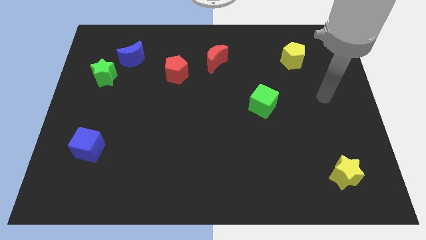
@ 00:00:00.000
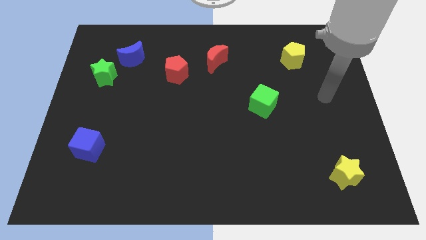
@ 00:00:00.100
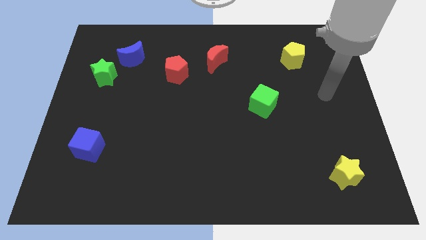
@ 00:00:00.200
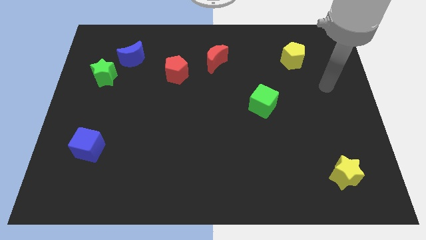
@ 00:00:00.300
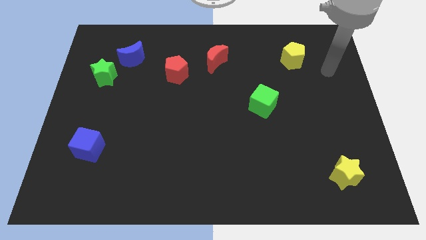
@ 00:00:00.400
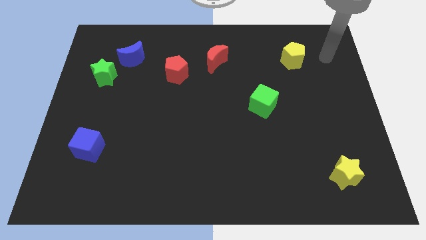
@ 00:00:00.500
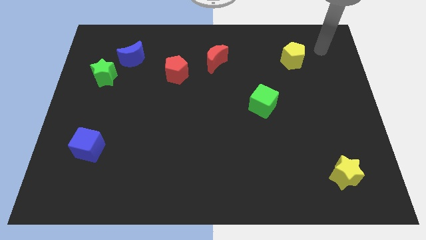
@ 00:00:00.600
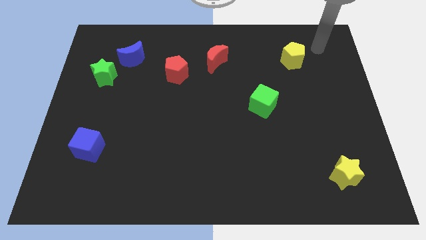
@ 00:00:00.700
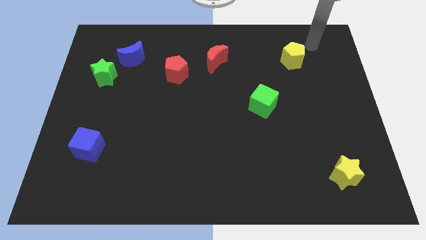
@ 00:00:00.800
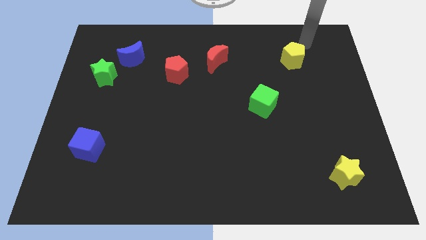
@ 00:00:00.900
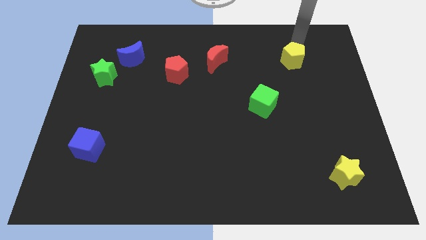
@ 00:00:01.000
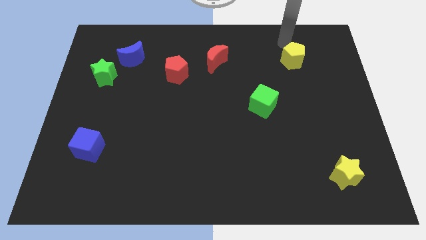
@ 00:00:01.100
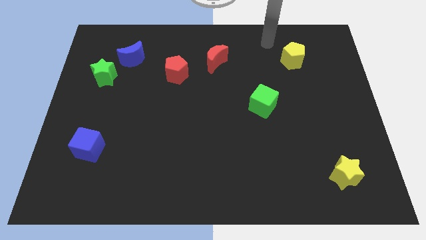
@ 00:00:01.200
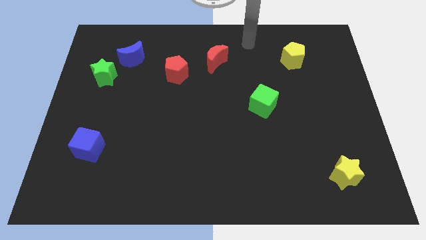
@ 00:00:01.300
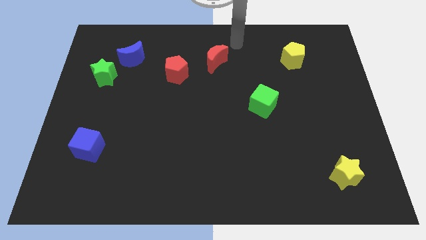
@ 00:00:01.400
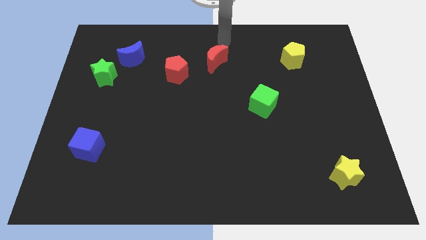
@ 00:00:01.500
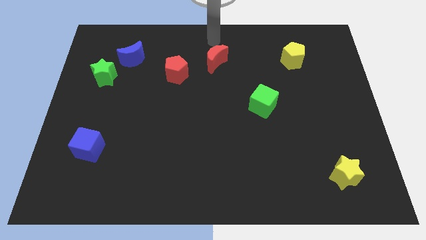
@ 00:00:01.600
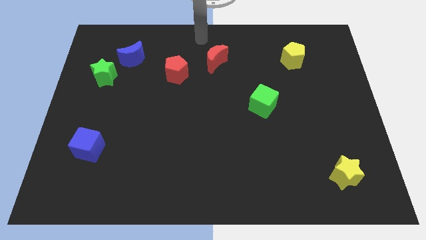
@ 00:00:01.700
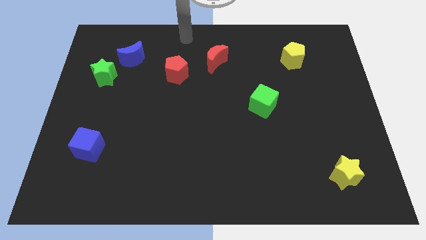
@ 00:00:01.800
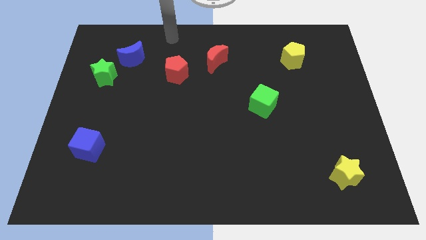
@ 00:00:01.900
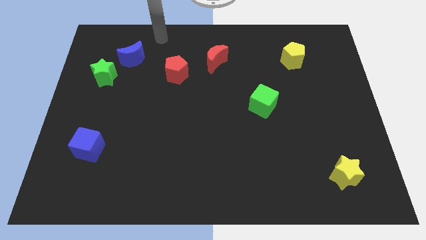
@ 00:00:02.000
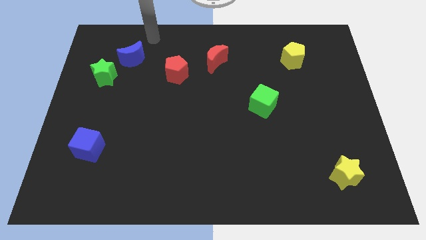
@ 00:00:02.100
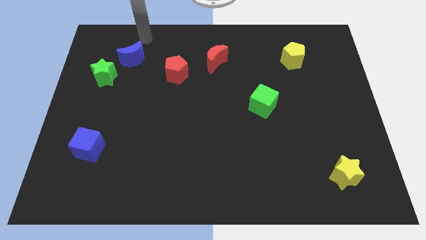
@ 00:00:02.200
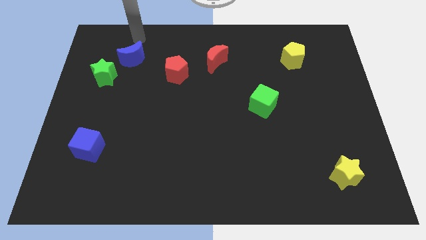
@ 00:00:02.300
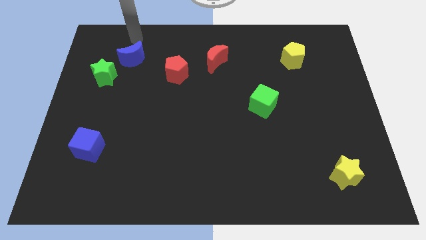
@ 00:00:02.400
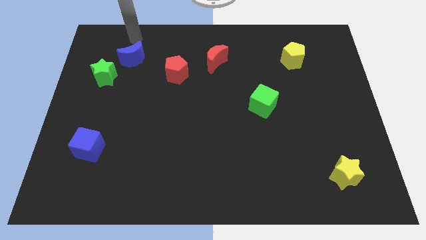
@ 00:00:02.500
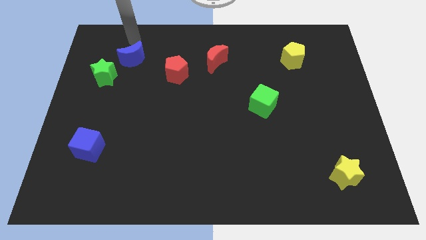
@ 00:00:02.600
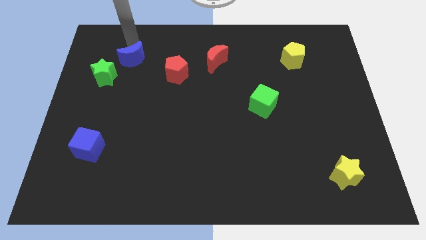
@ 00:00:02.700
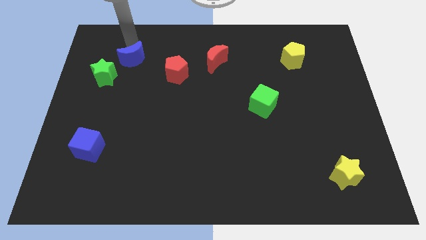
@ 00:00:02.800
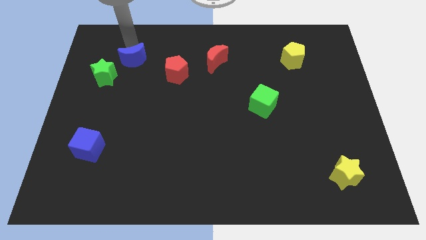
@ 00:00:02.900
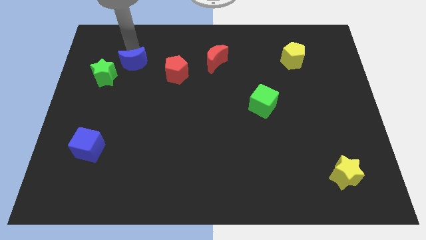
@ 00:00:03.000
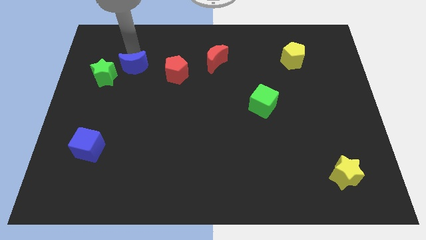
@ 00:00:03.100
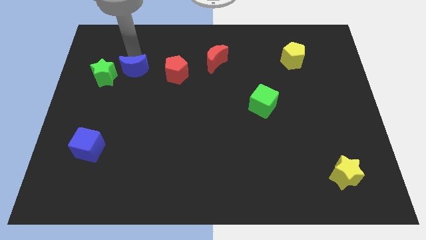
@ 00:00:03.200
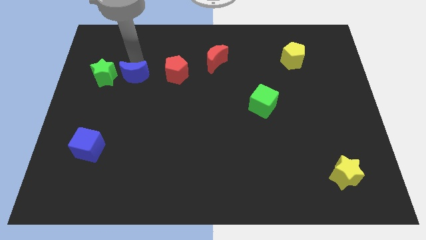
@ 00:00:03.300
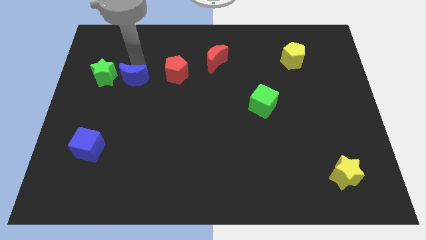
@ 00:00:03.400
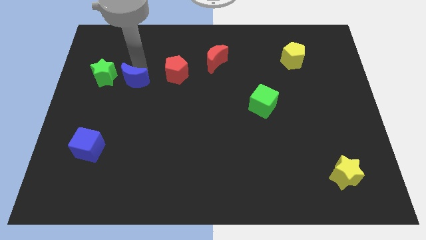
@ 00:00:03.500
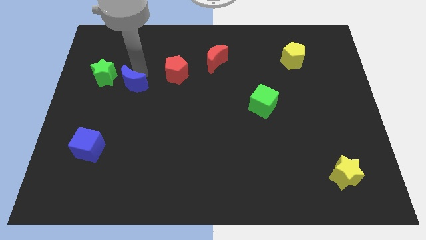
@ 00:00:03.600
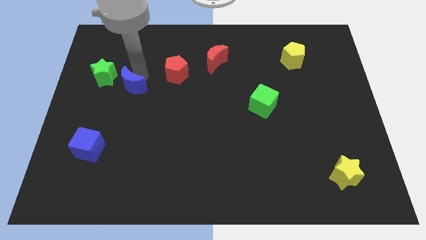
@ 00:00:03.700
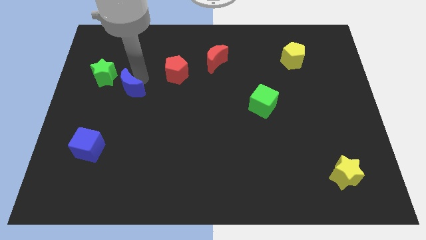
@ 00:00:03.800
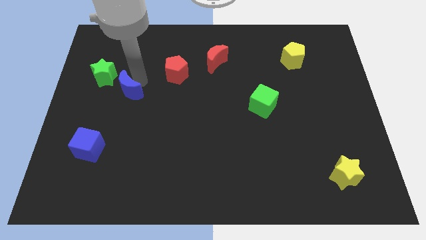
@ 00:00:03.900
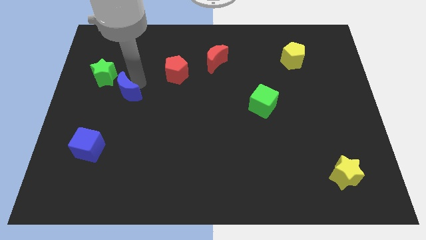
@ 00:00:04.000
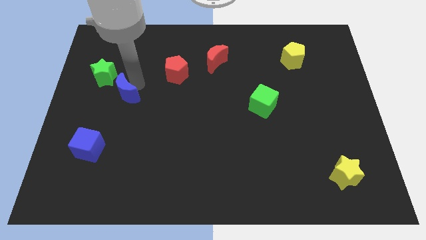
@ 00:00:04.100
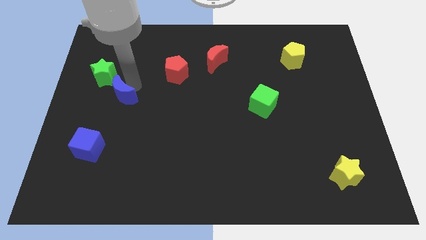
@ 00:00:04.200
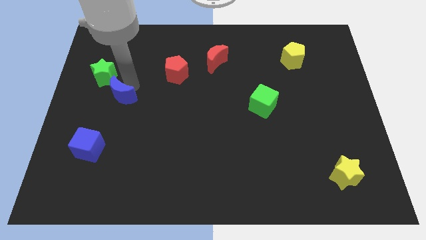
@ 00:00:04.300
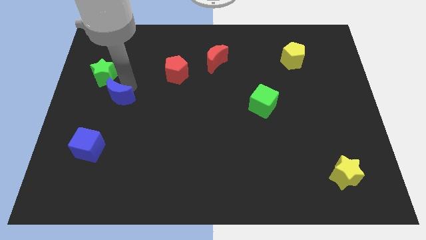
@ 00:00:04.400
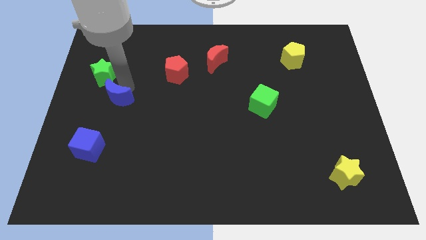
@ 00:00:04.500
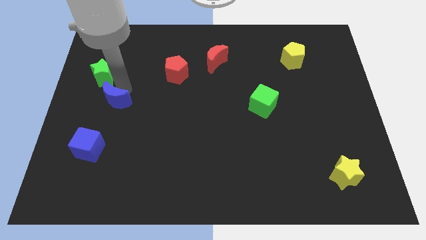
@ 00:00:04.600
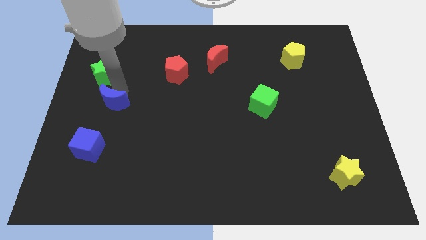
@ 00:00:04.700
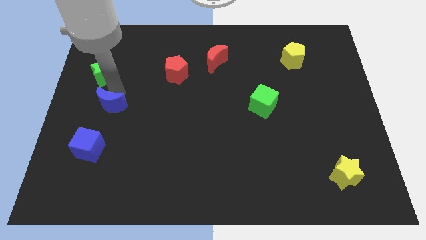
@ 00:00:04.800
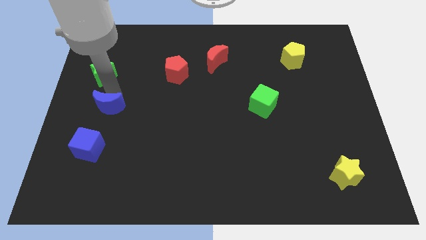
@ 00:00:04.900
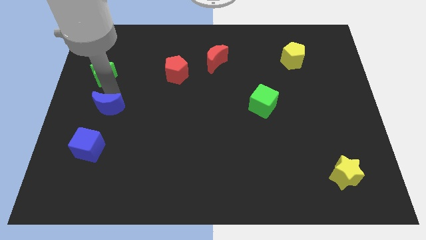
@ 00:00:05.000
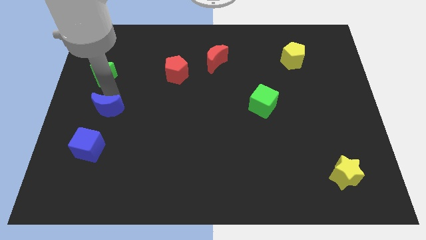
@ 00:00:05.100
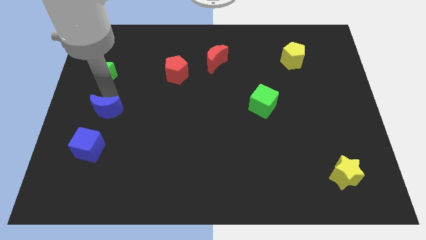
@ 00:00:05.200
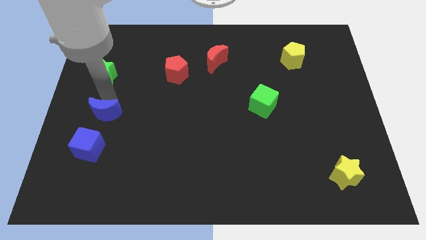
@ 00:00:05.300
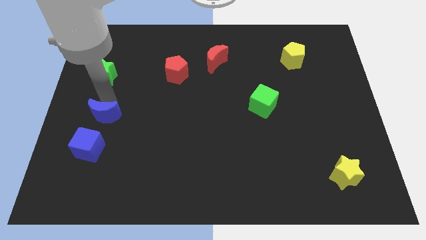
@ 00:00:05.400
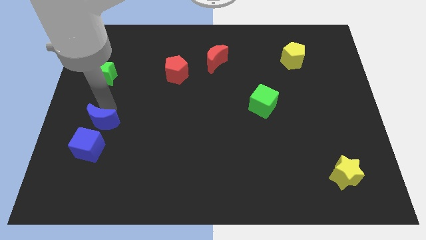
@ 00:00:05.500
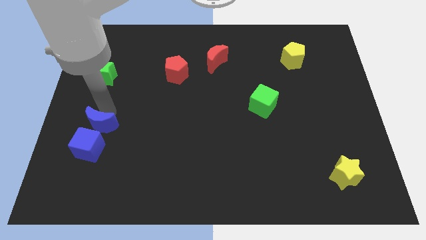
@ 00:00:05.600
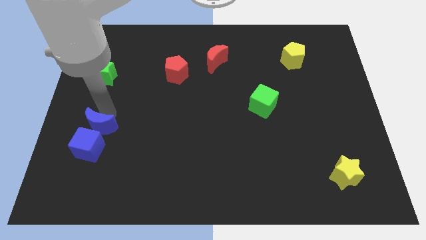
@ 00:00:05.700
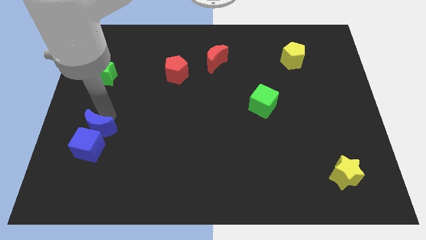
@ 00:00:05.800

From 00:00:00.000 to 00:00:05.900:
slide the blue moon towards the blue cube

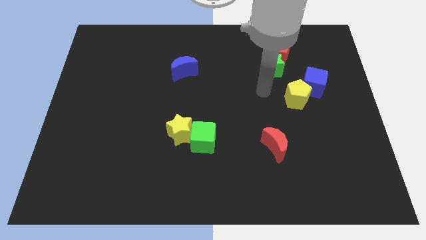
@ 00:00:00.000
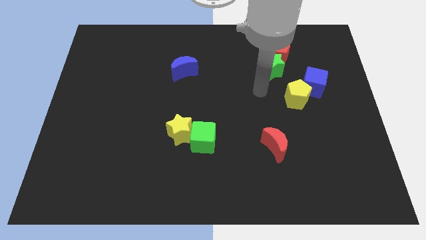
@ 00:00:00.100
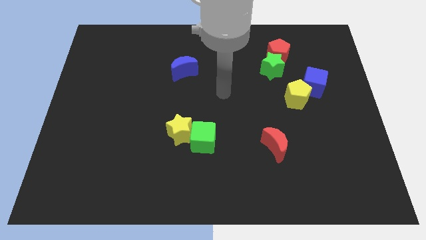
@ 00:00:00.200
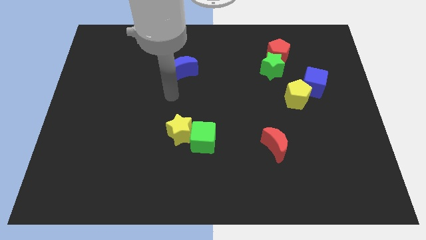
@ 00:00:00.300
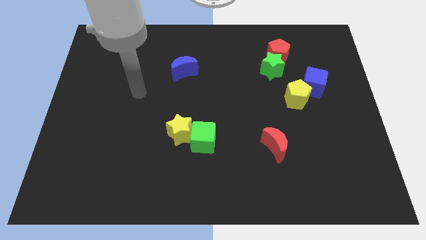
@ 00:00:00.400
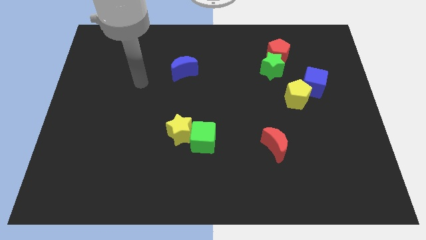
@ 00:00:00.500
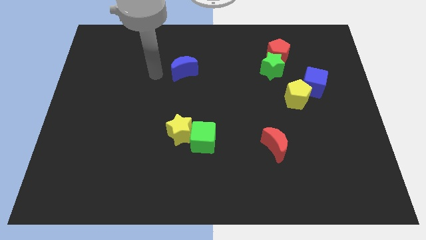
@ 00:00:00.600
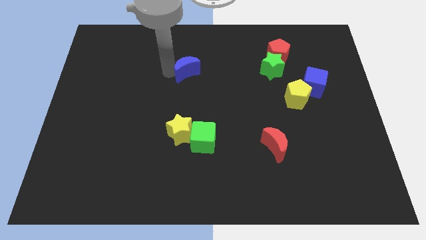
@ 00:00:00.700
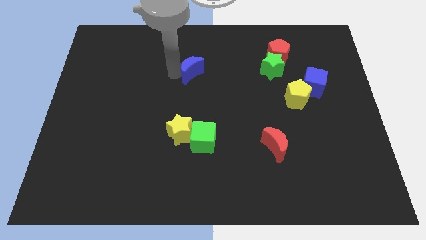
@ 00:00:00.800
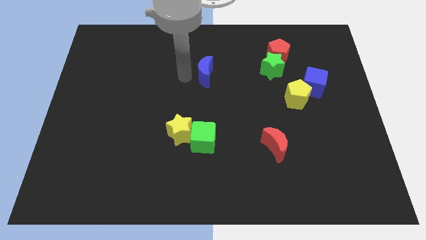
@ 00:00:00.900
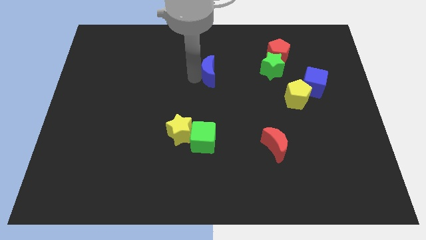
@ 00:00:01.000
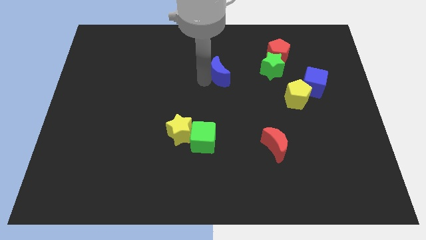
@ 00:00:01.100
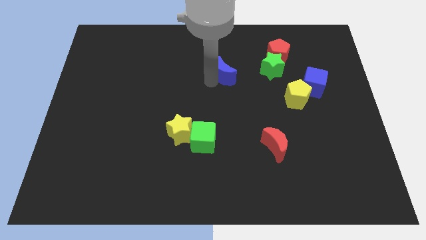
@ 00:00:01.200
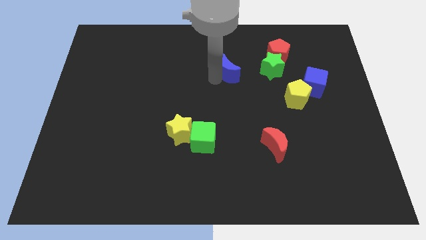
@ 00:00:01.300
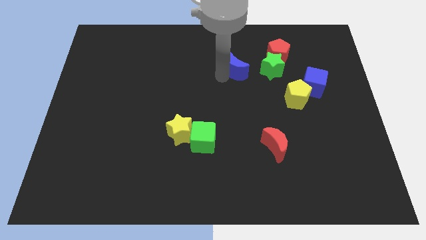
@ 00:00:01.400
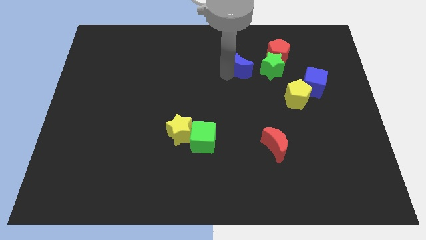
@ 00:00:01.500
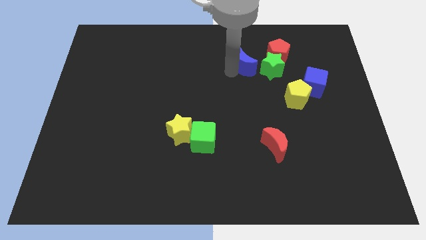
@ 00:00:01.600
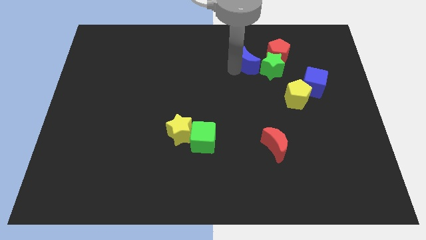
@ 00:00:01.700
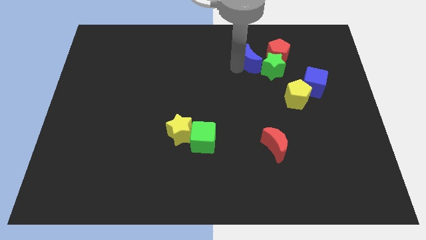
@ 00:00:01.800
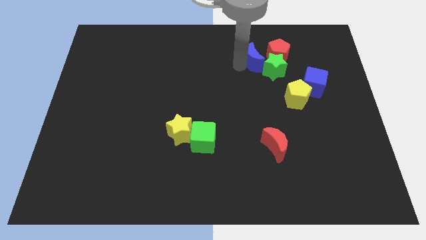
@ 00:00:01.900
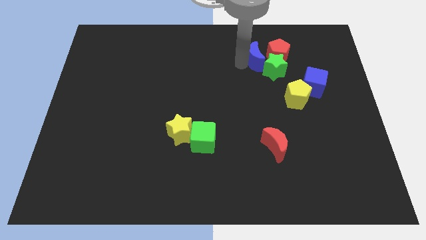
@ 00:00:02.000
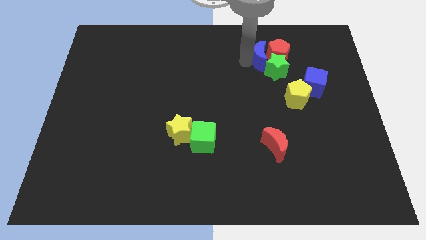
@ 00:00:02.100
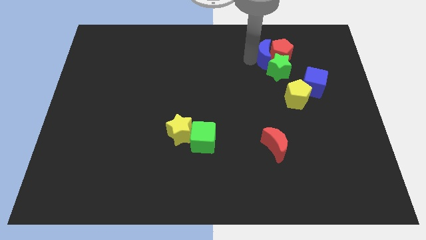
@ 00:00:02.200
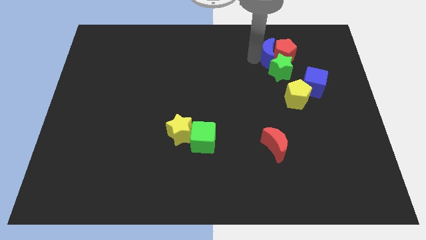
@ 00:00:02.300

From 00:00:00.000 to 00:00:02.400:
move the blue moon to the red pentagon

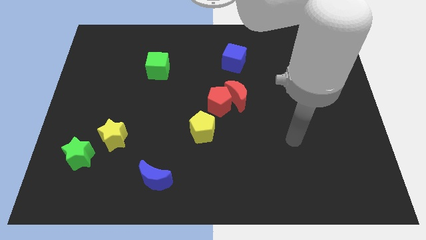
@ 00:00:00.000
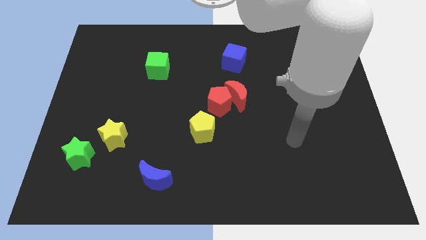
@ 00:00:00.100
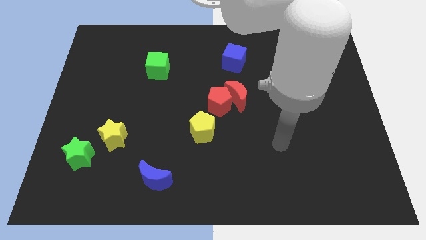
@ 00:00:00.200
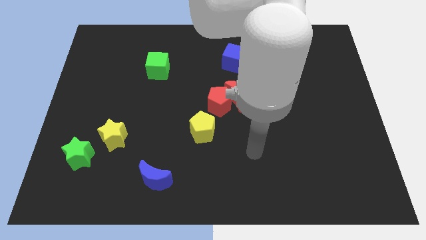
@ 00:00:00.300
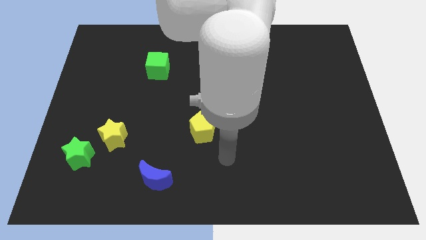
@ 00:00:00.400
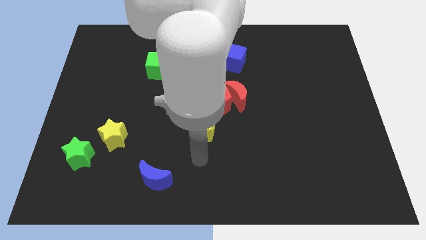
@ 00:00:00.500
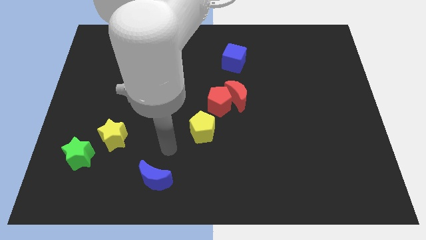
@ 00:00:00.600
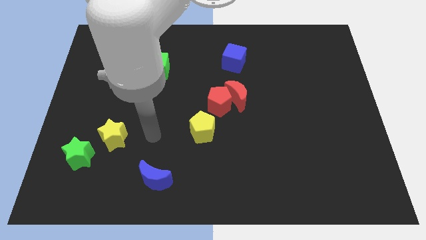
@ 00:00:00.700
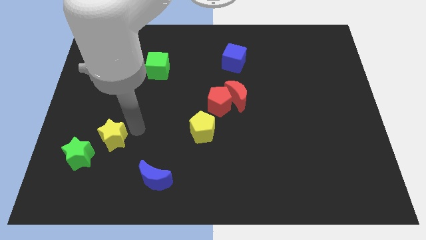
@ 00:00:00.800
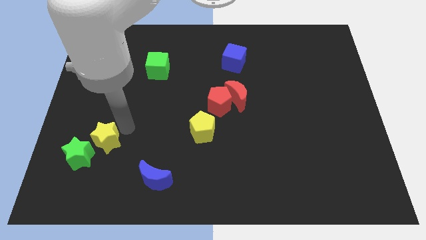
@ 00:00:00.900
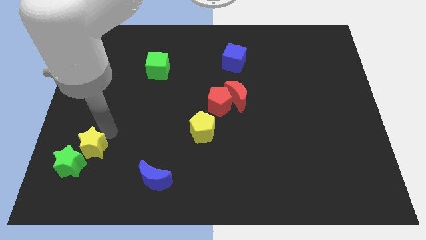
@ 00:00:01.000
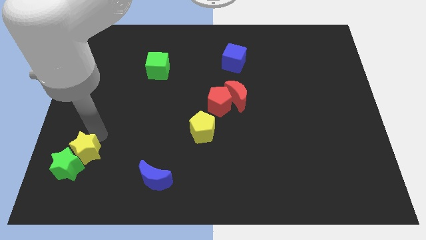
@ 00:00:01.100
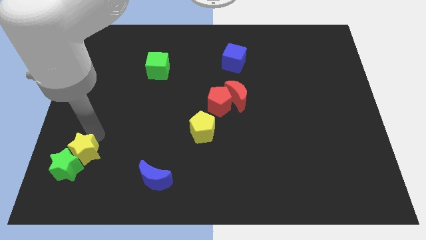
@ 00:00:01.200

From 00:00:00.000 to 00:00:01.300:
put the yellow star towards the green star
